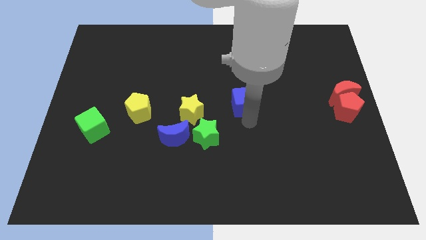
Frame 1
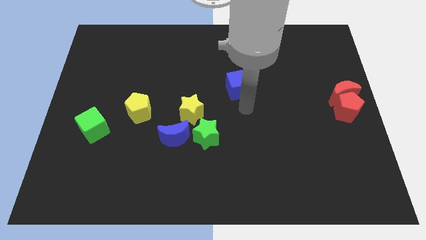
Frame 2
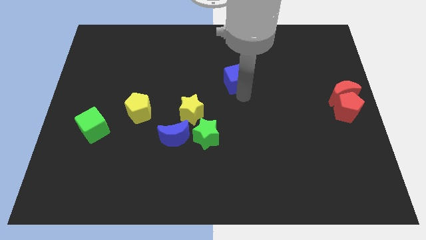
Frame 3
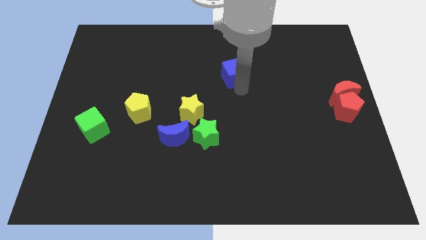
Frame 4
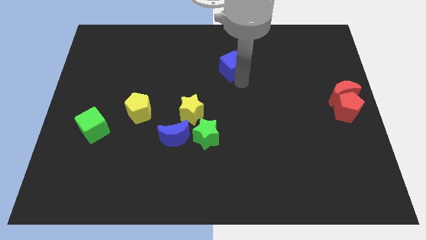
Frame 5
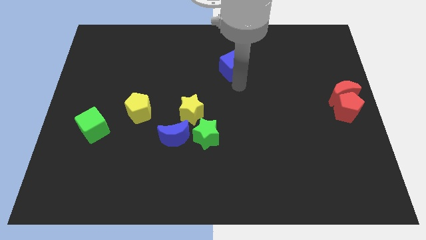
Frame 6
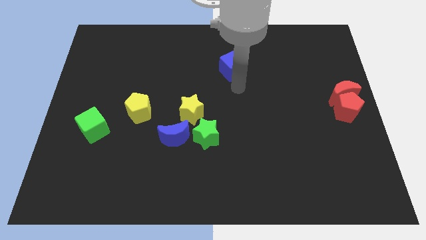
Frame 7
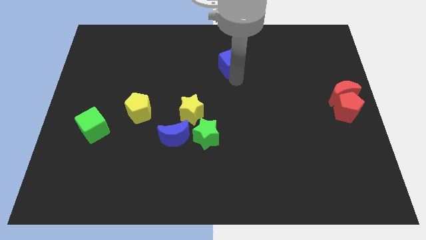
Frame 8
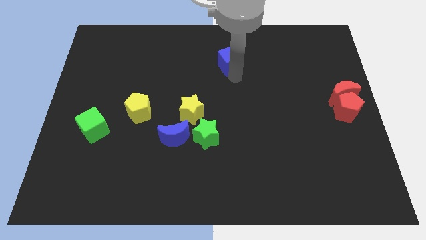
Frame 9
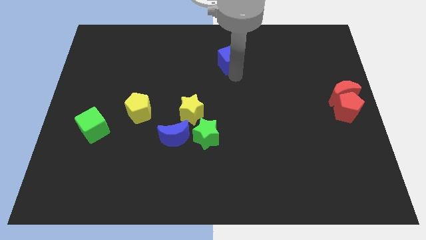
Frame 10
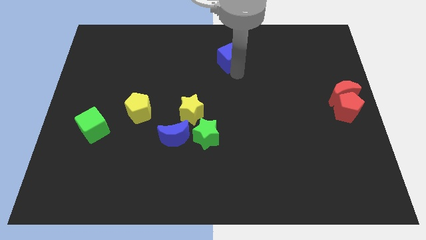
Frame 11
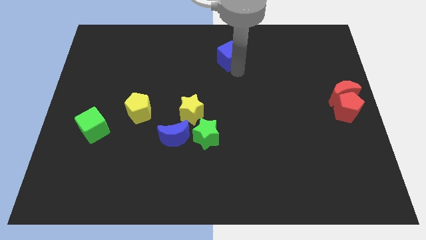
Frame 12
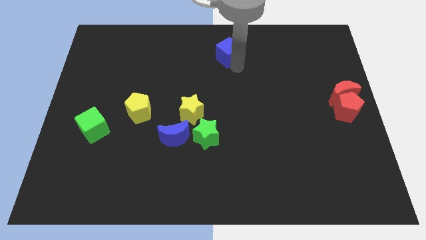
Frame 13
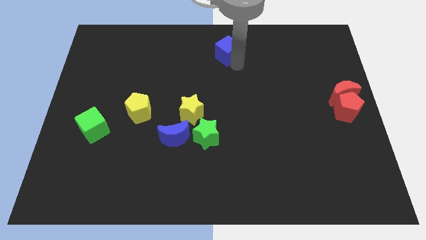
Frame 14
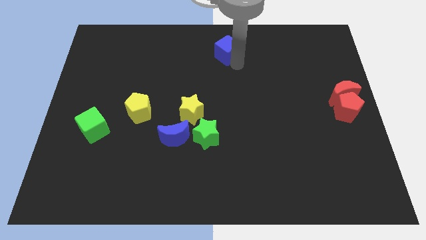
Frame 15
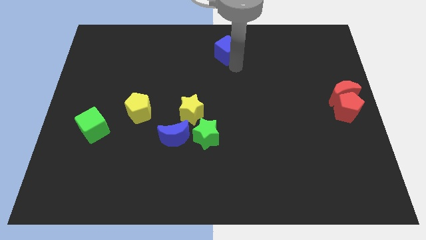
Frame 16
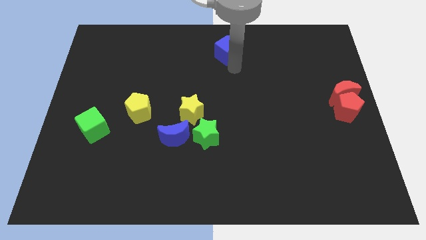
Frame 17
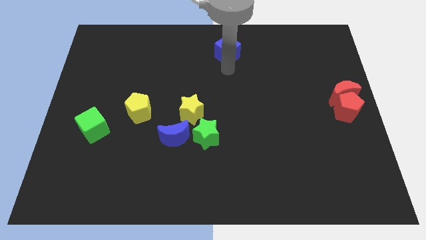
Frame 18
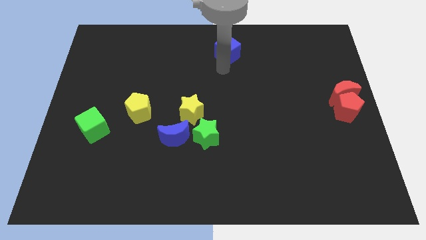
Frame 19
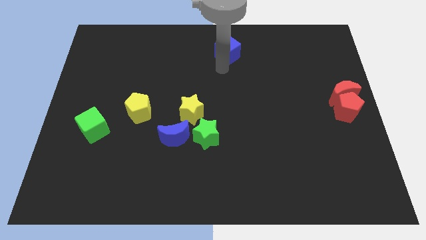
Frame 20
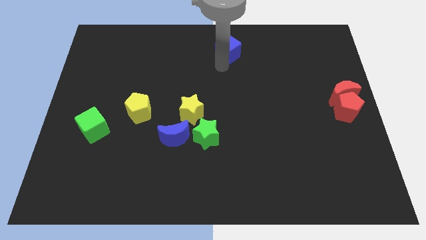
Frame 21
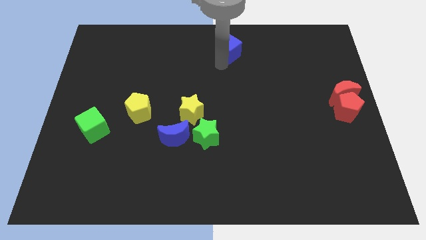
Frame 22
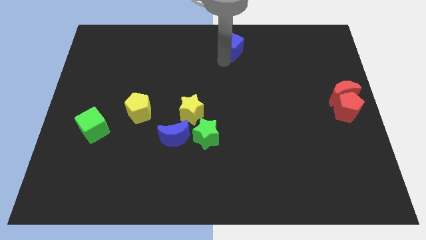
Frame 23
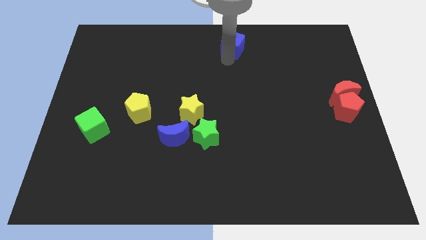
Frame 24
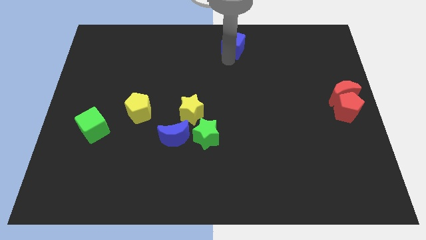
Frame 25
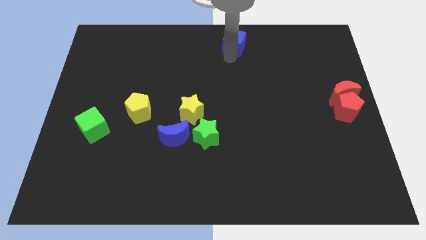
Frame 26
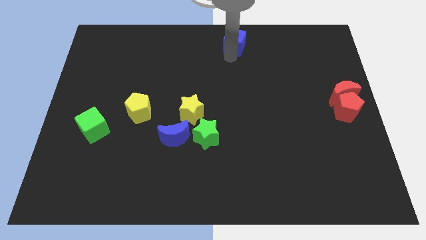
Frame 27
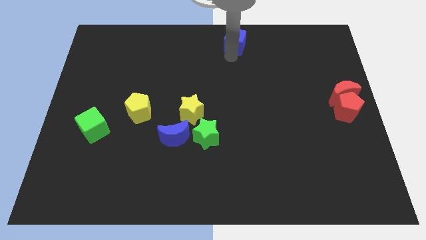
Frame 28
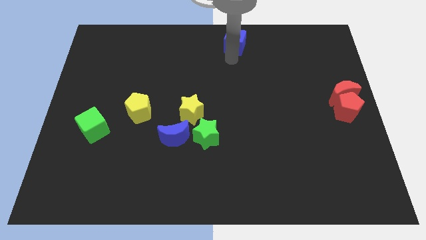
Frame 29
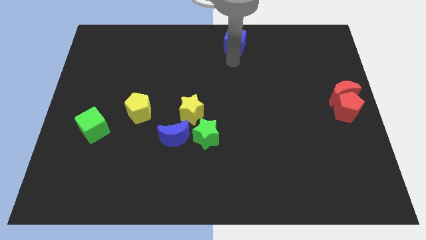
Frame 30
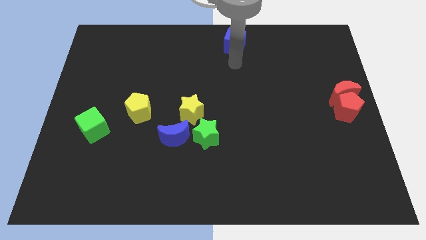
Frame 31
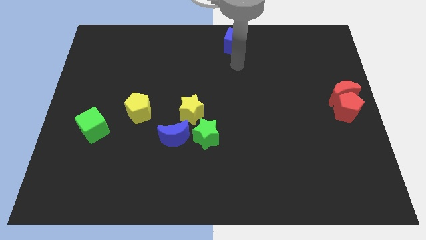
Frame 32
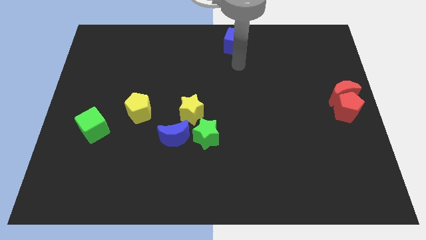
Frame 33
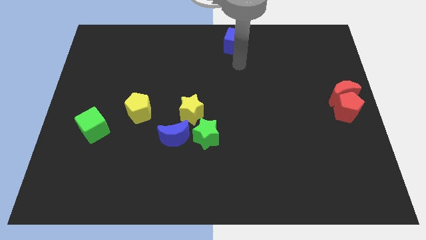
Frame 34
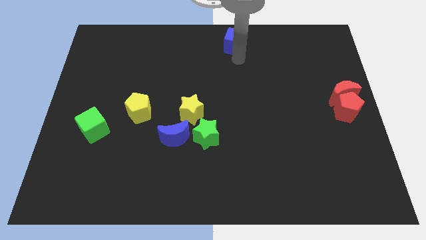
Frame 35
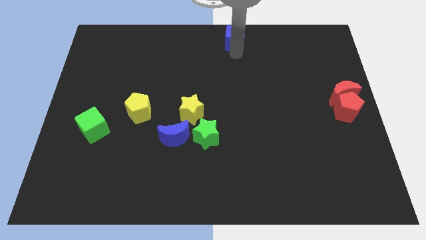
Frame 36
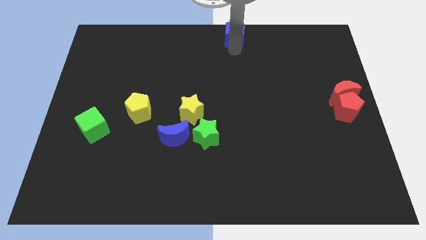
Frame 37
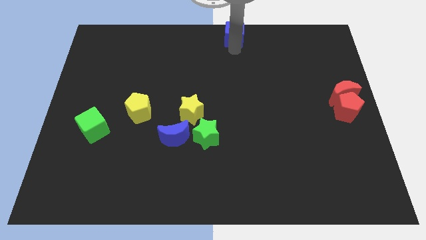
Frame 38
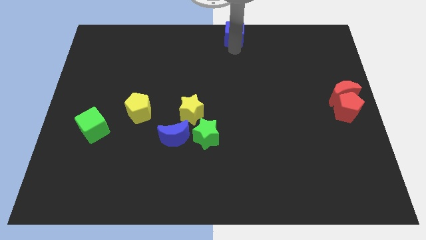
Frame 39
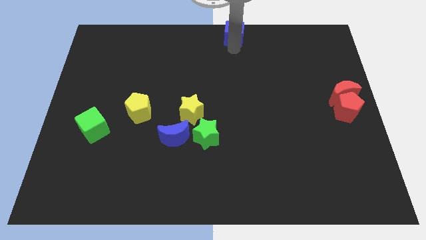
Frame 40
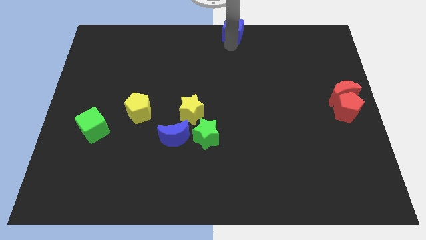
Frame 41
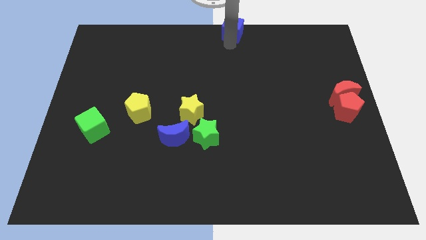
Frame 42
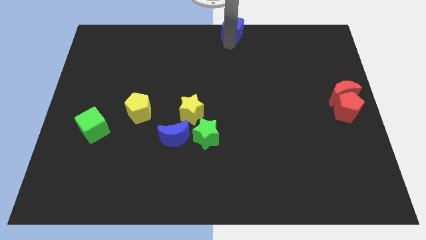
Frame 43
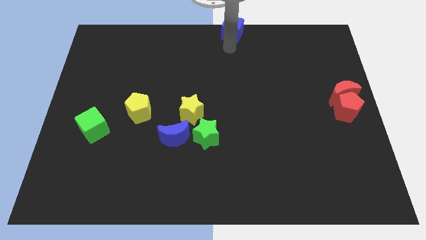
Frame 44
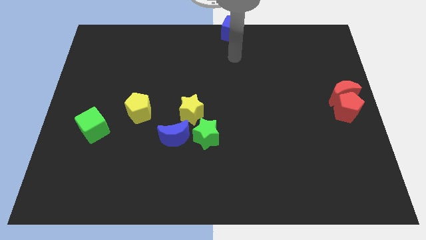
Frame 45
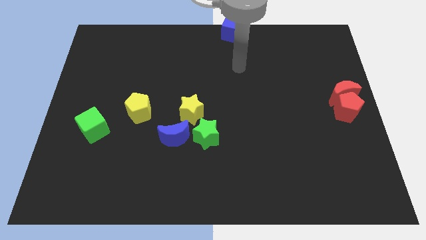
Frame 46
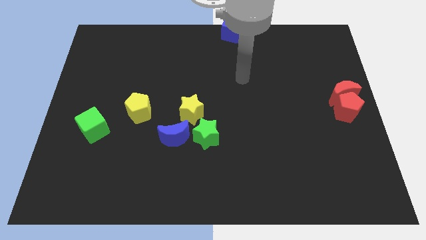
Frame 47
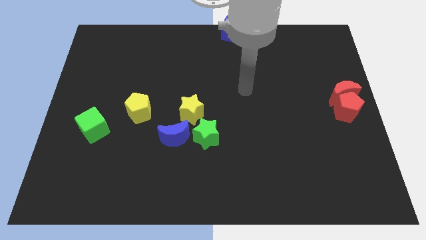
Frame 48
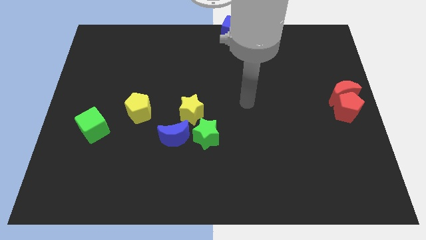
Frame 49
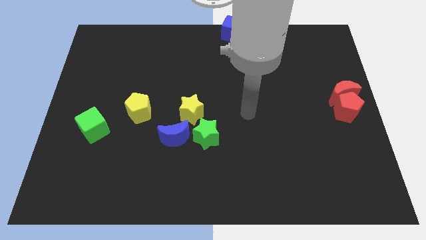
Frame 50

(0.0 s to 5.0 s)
slide the blue cube at the top center

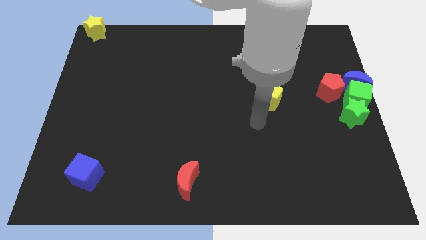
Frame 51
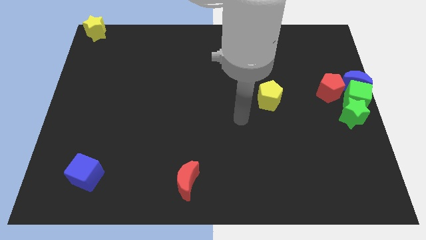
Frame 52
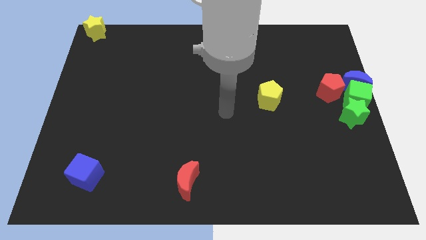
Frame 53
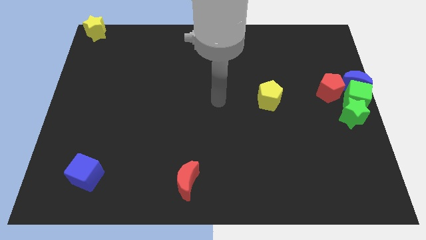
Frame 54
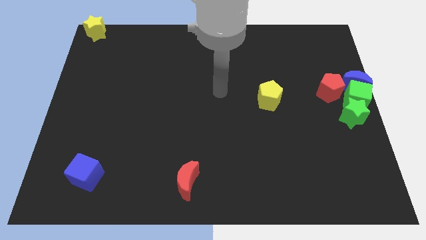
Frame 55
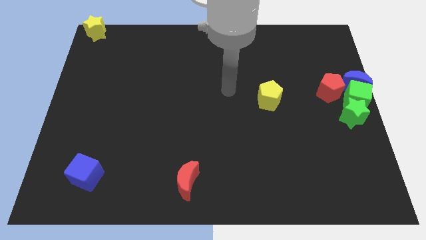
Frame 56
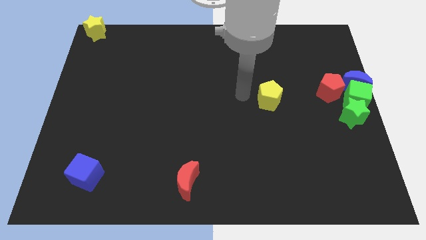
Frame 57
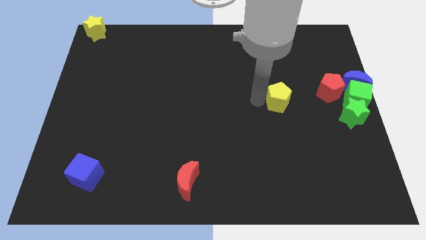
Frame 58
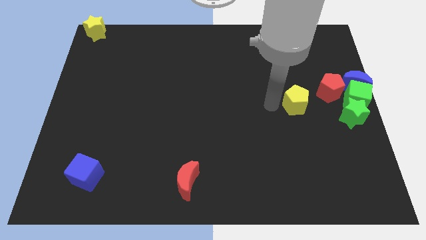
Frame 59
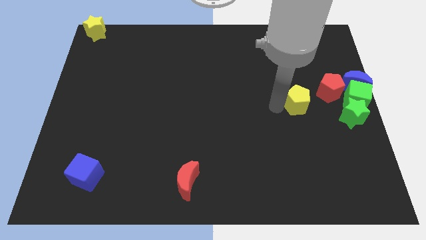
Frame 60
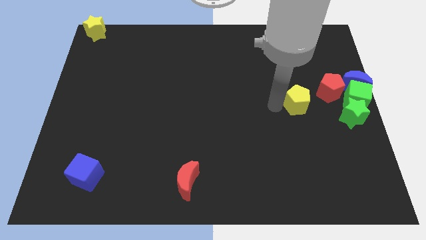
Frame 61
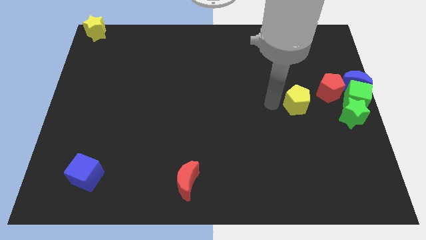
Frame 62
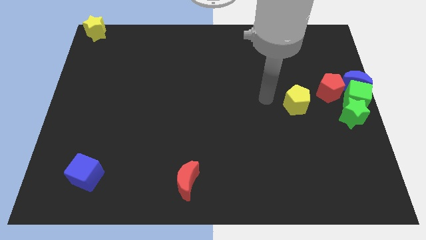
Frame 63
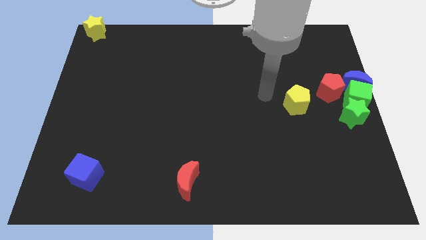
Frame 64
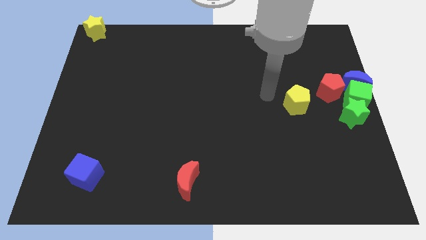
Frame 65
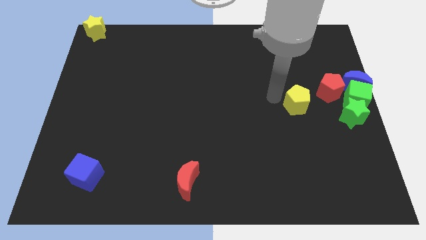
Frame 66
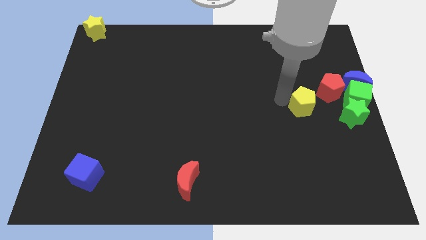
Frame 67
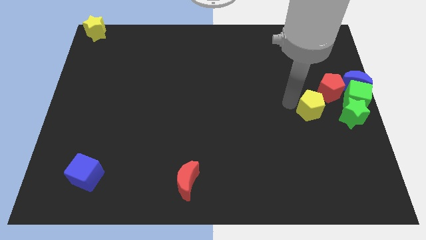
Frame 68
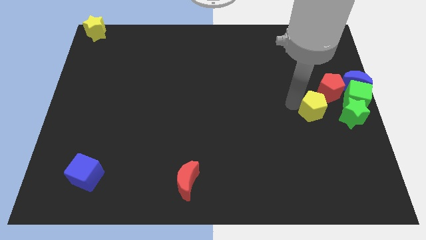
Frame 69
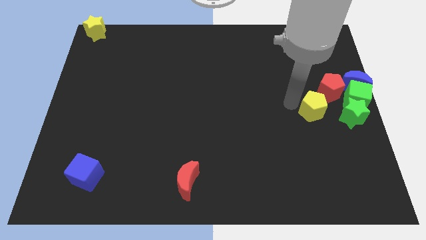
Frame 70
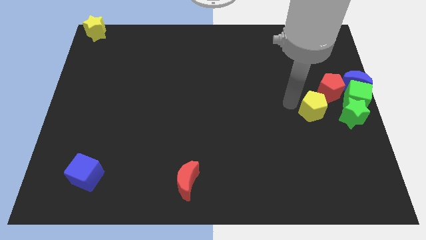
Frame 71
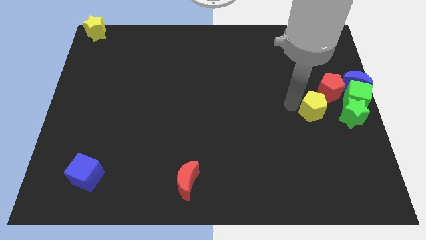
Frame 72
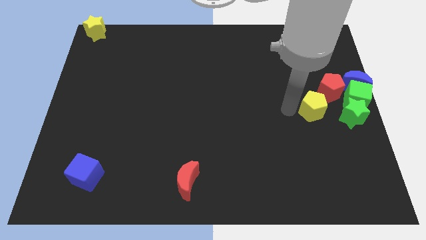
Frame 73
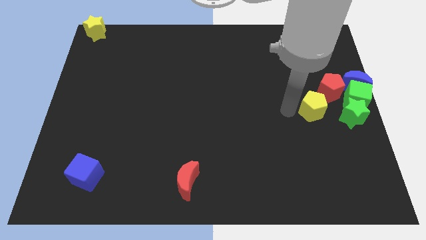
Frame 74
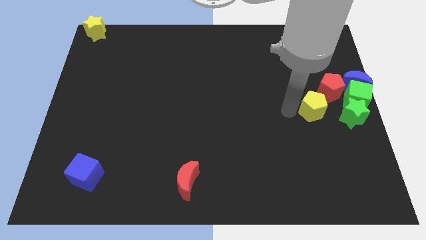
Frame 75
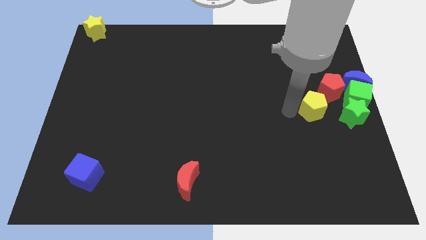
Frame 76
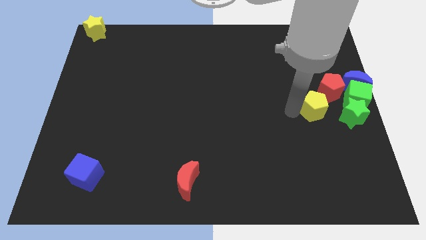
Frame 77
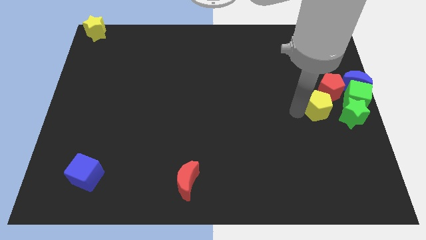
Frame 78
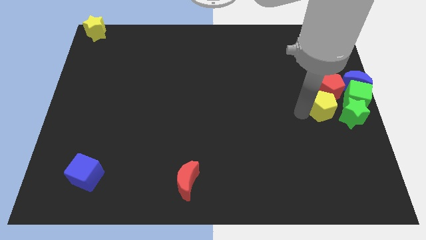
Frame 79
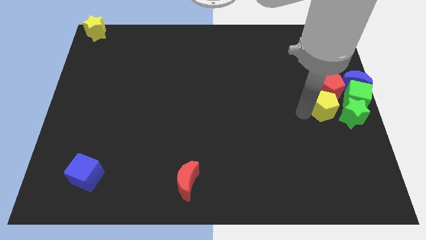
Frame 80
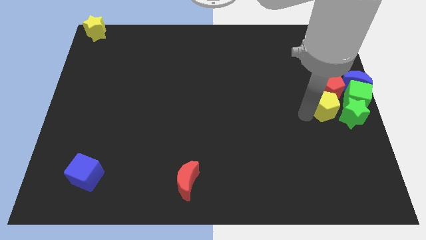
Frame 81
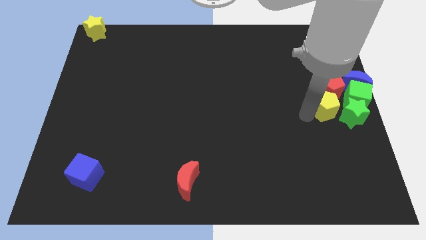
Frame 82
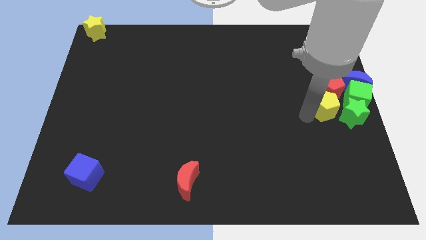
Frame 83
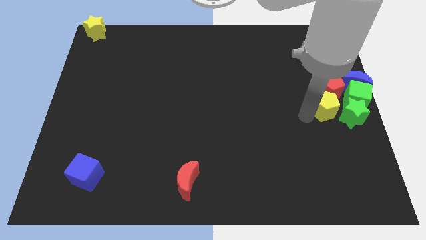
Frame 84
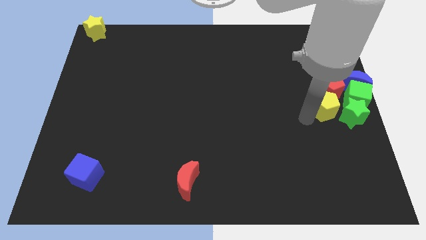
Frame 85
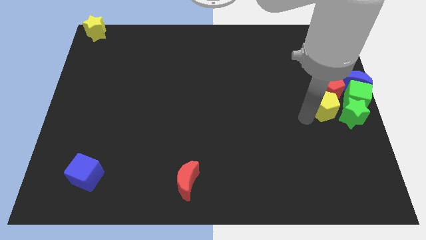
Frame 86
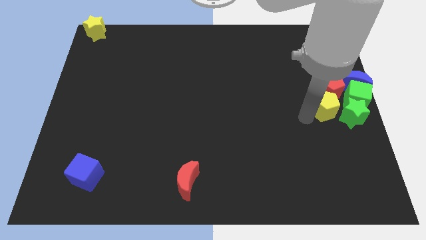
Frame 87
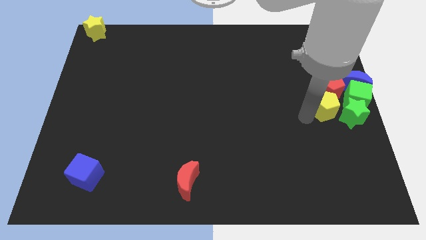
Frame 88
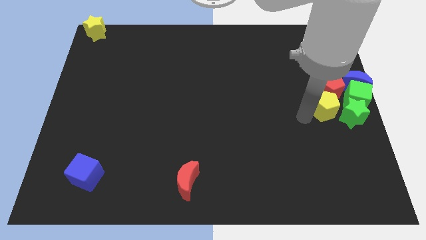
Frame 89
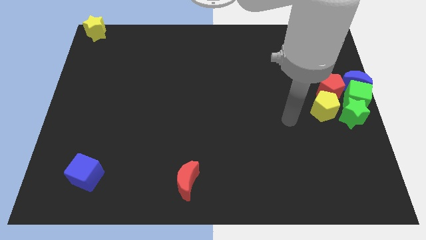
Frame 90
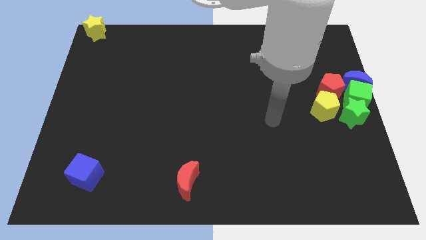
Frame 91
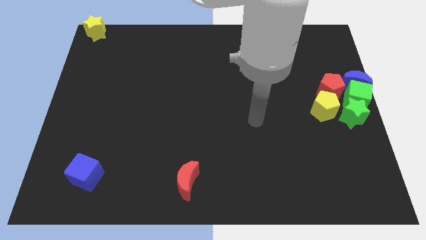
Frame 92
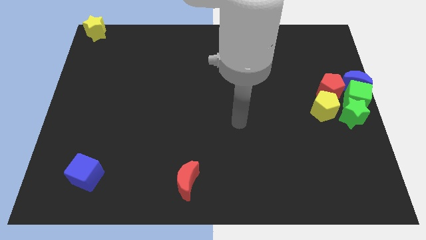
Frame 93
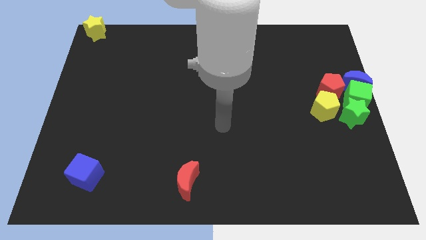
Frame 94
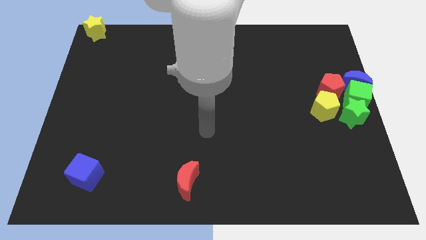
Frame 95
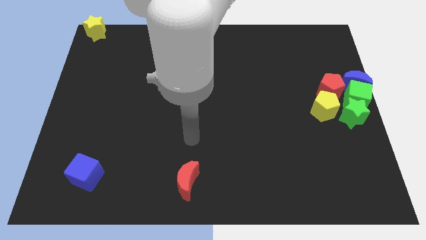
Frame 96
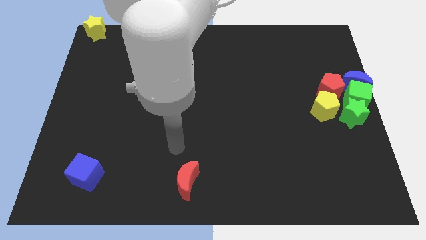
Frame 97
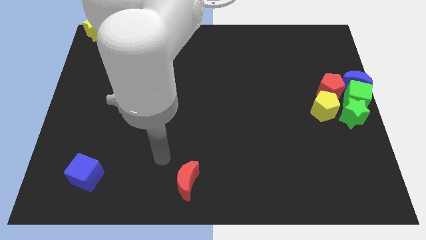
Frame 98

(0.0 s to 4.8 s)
push the yellow pentagon to the left of the green star
